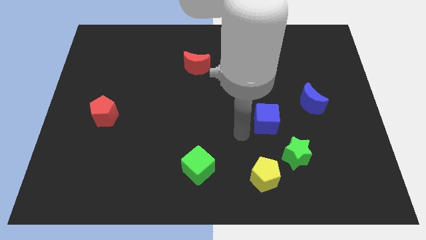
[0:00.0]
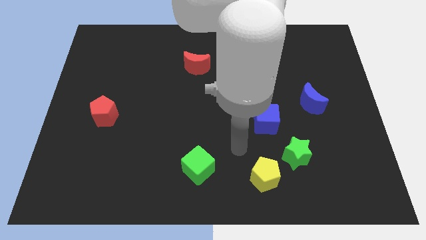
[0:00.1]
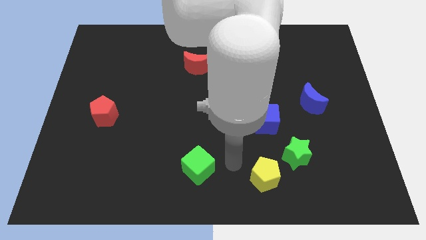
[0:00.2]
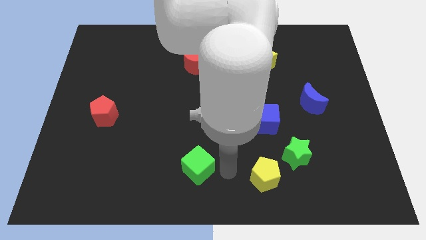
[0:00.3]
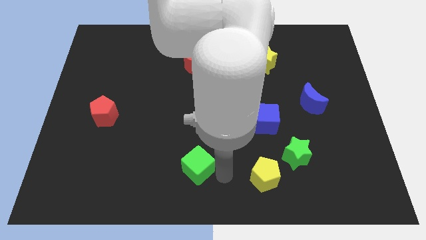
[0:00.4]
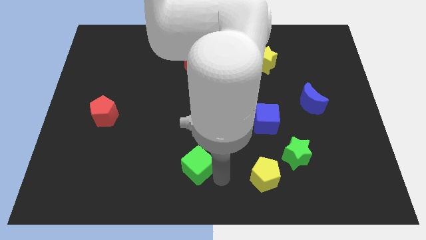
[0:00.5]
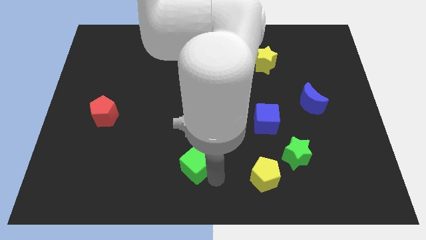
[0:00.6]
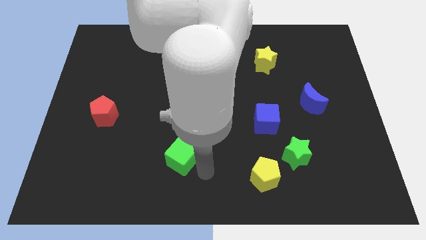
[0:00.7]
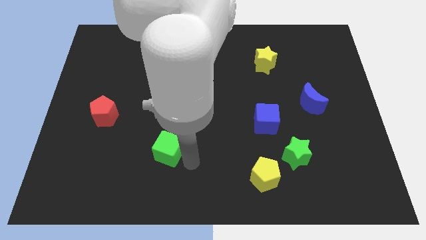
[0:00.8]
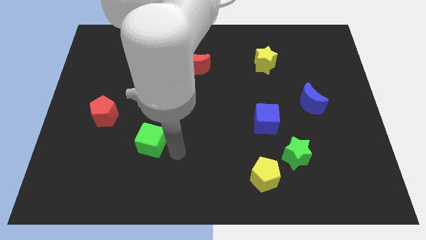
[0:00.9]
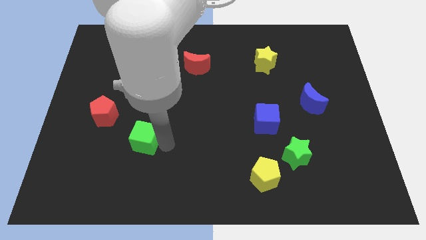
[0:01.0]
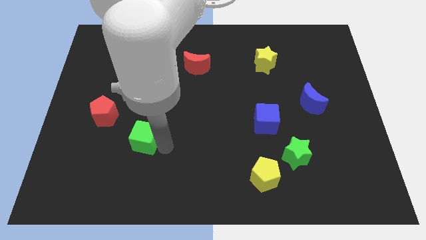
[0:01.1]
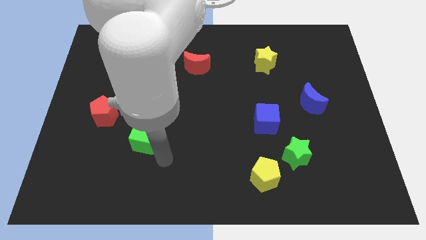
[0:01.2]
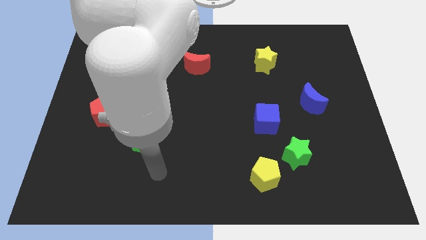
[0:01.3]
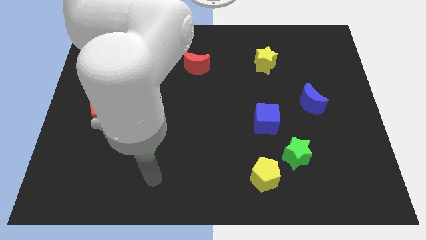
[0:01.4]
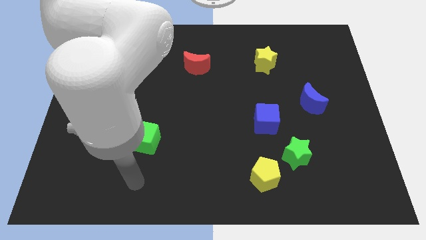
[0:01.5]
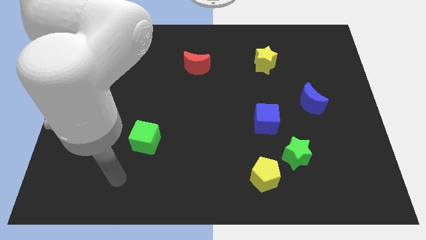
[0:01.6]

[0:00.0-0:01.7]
place the green cube diagonally to the red pentagon

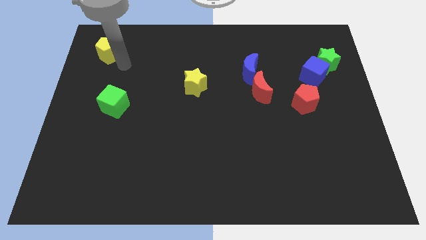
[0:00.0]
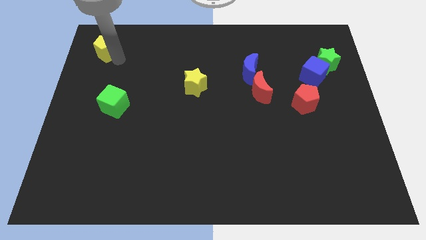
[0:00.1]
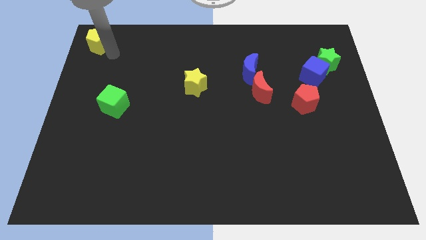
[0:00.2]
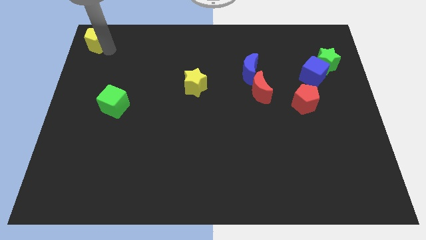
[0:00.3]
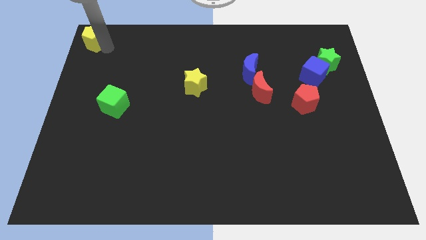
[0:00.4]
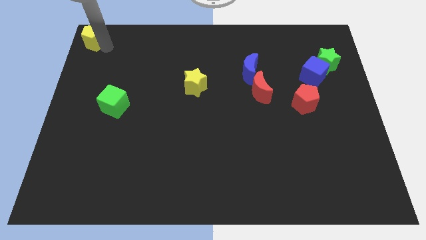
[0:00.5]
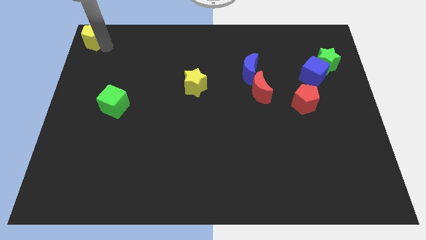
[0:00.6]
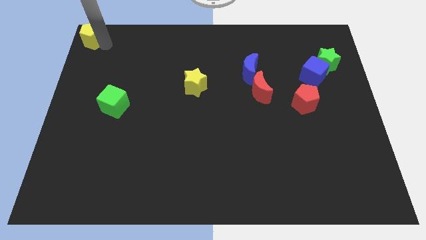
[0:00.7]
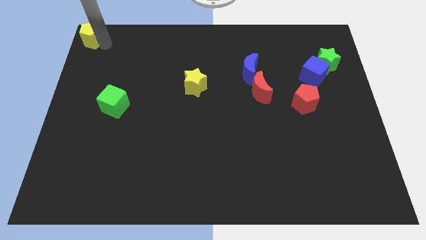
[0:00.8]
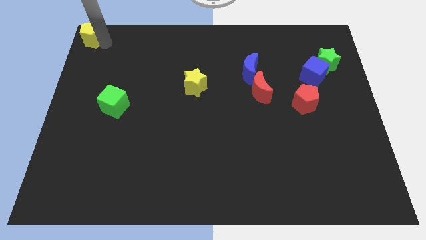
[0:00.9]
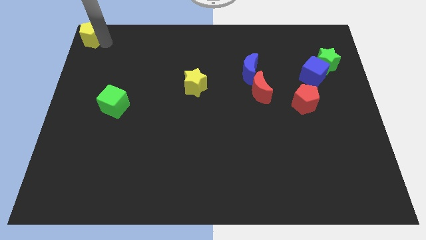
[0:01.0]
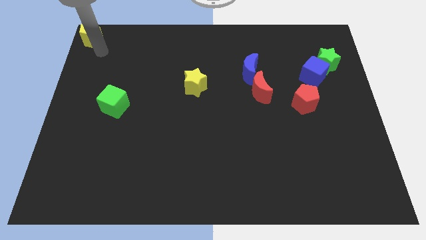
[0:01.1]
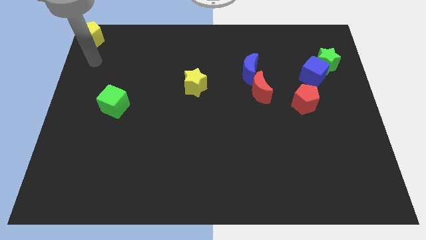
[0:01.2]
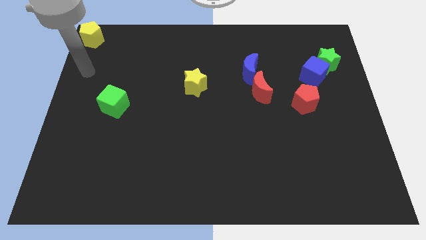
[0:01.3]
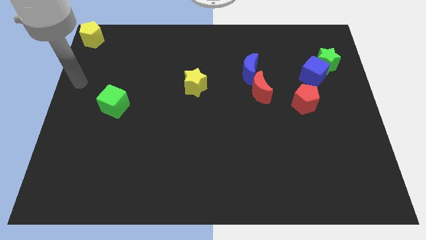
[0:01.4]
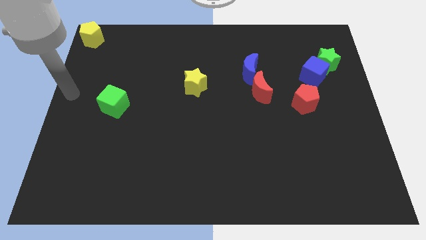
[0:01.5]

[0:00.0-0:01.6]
place the yellow pentagon at the top left corner of the board

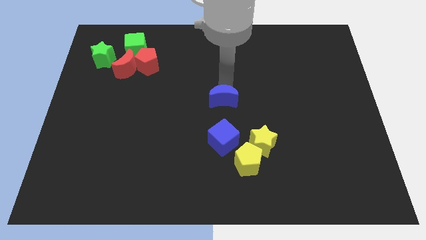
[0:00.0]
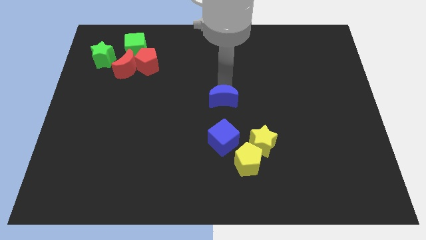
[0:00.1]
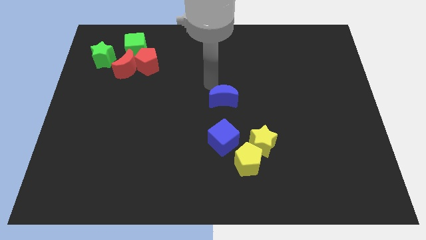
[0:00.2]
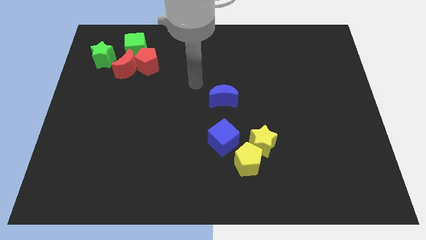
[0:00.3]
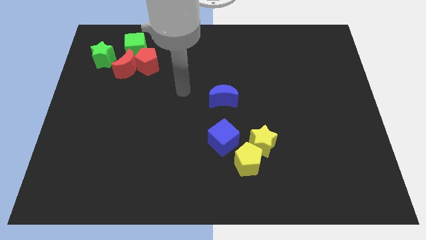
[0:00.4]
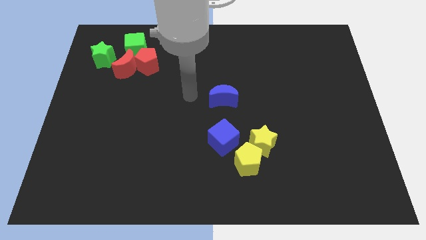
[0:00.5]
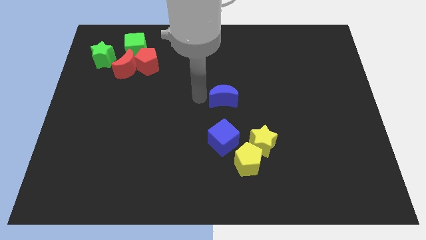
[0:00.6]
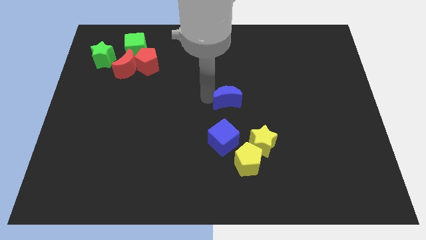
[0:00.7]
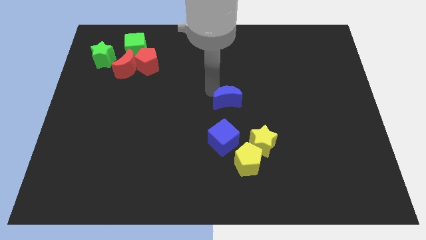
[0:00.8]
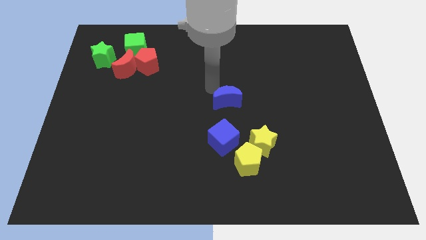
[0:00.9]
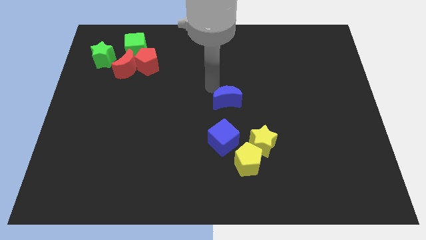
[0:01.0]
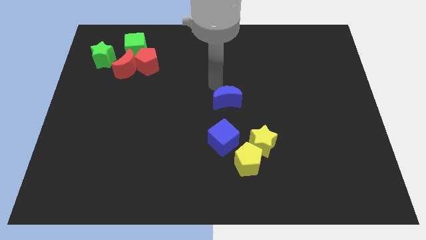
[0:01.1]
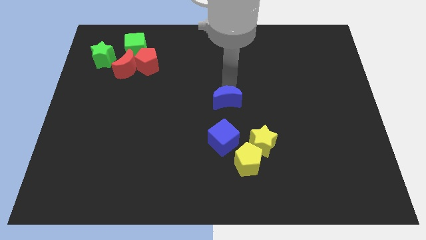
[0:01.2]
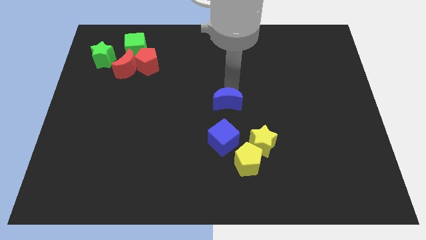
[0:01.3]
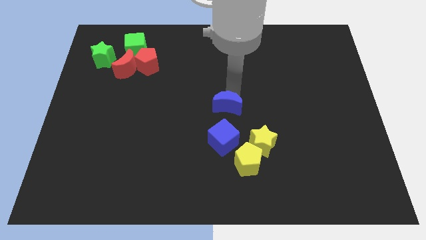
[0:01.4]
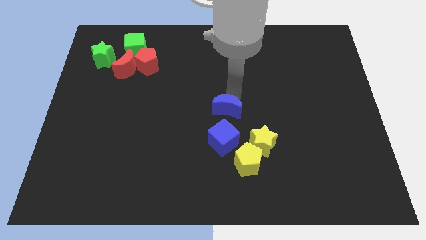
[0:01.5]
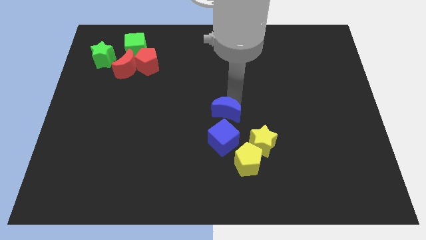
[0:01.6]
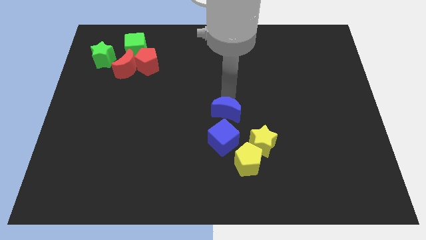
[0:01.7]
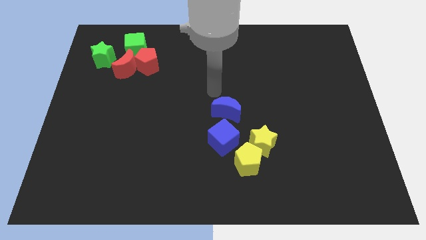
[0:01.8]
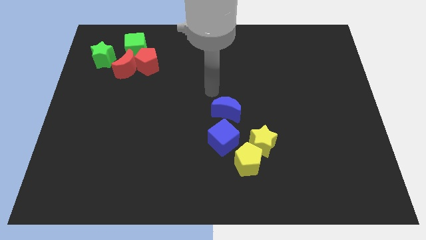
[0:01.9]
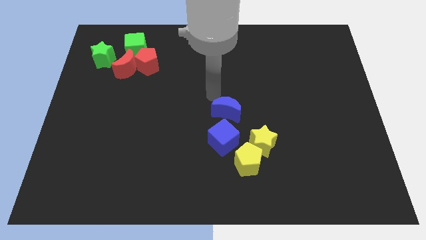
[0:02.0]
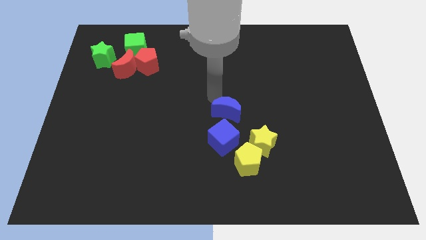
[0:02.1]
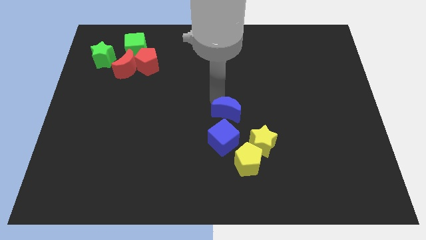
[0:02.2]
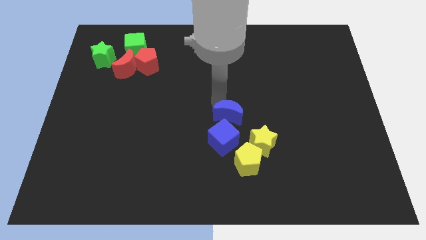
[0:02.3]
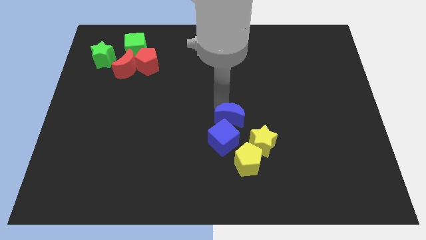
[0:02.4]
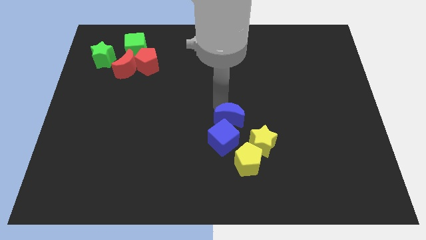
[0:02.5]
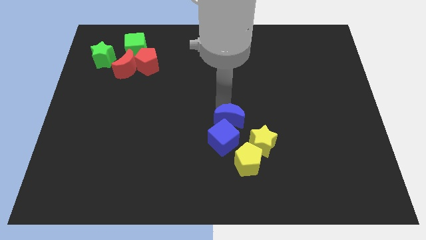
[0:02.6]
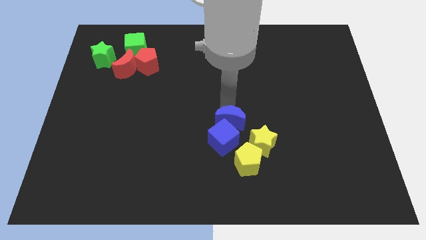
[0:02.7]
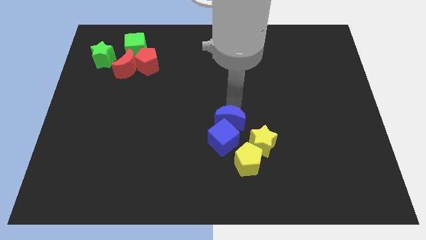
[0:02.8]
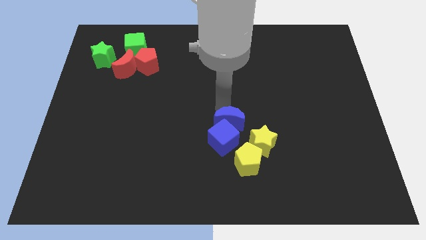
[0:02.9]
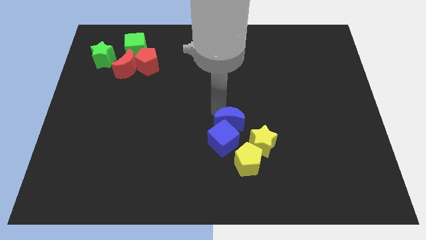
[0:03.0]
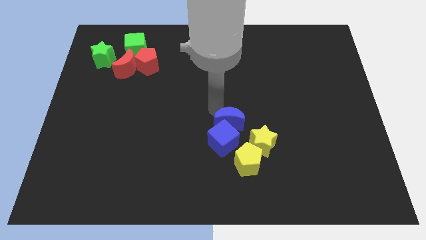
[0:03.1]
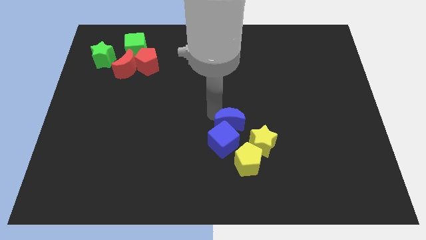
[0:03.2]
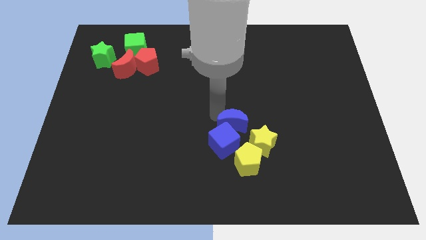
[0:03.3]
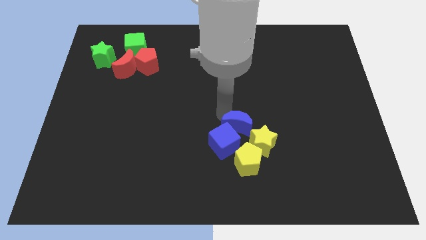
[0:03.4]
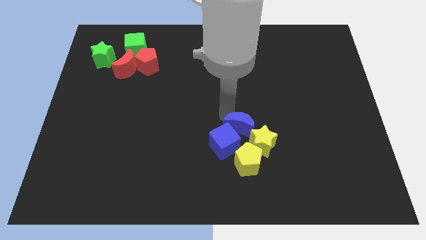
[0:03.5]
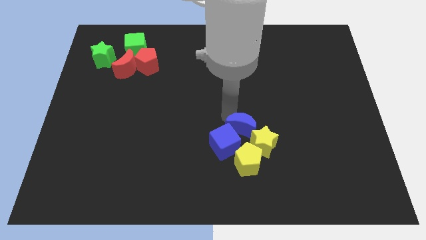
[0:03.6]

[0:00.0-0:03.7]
slide the blue moon into the blue cube

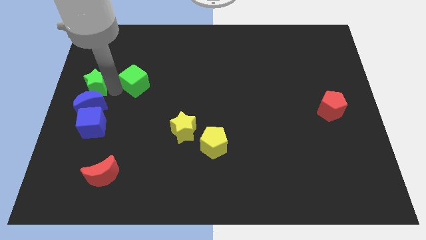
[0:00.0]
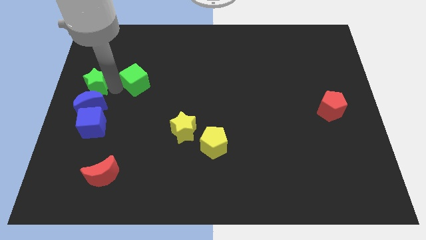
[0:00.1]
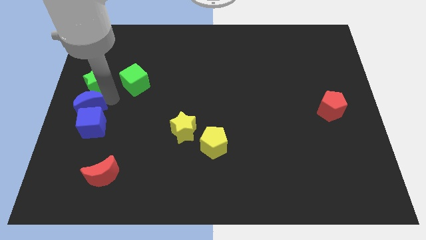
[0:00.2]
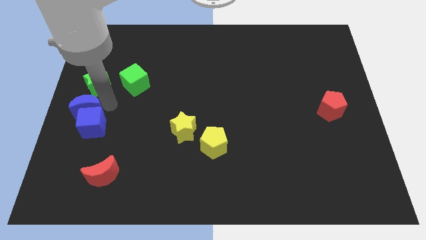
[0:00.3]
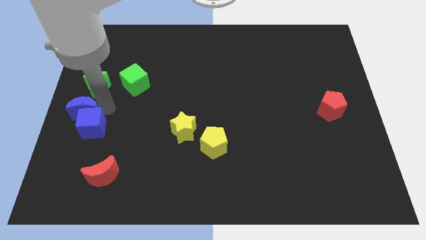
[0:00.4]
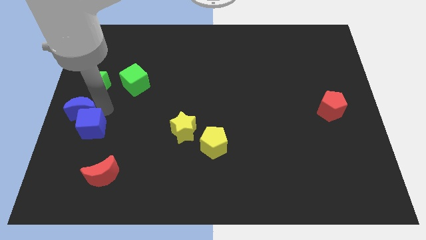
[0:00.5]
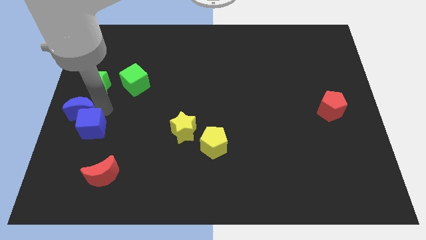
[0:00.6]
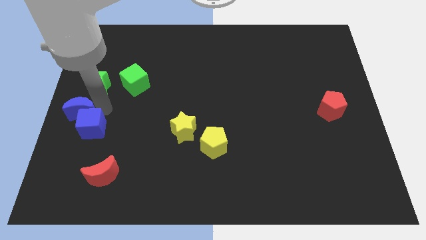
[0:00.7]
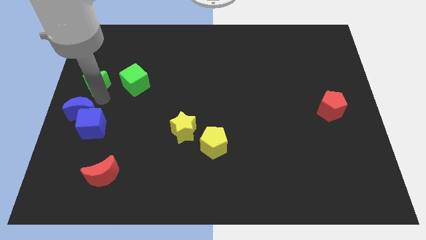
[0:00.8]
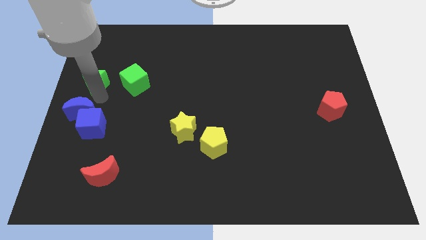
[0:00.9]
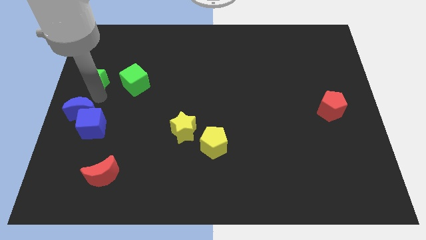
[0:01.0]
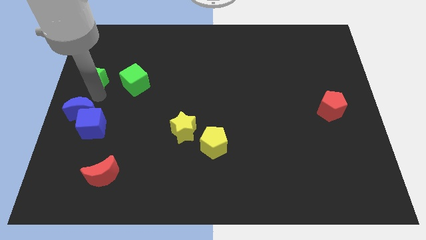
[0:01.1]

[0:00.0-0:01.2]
push the blue crescent into the blue cube

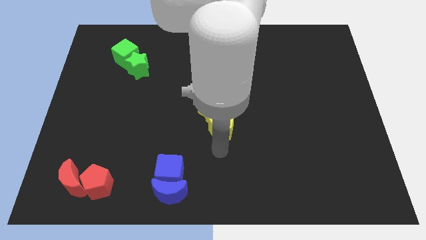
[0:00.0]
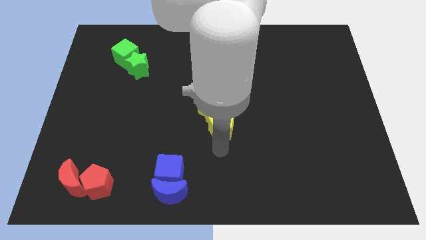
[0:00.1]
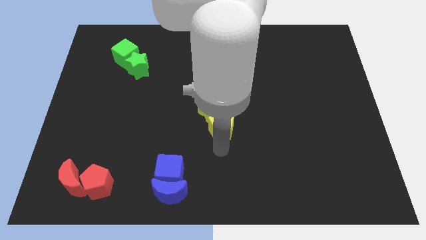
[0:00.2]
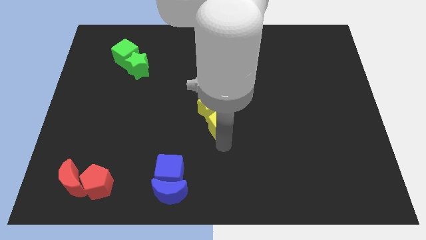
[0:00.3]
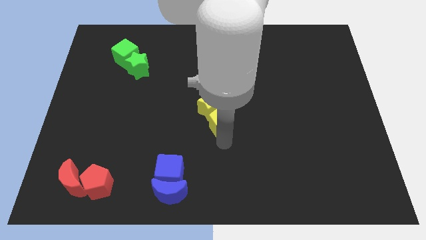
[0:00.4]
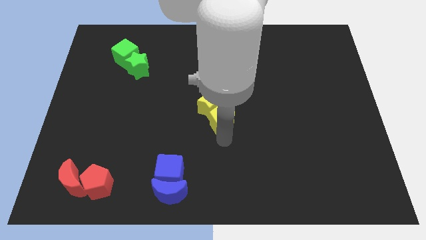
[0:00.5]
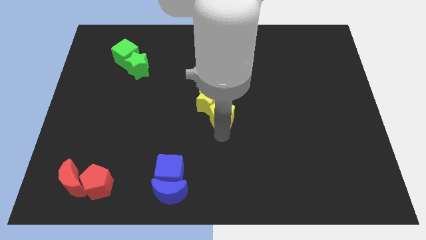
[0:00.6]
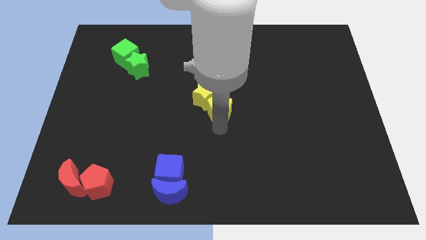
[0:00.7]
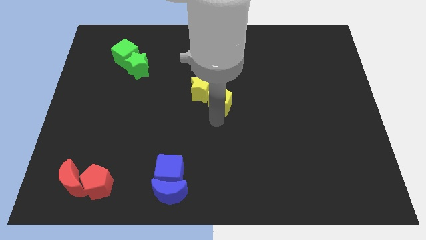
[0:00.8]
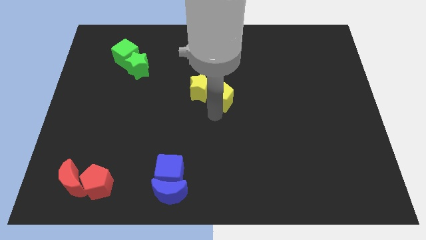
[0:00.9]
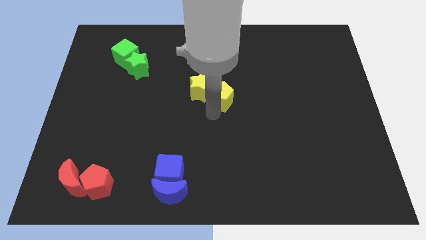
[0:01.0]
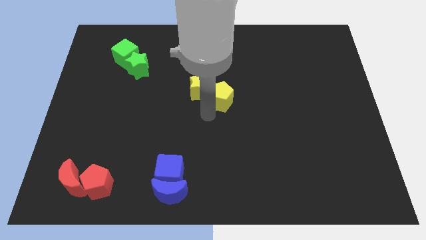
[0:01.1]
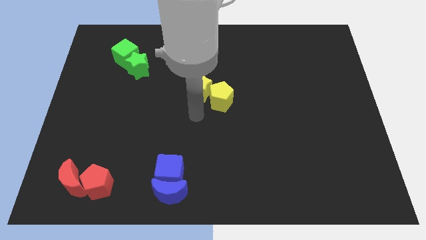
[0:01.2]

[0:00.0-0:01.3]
push the yellow pentagon along with yellow star to the center of the board
